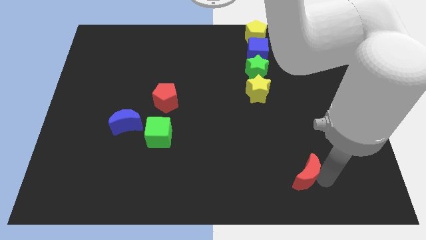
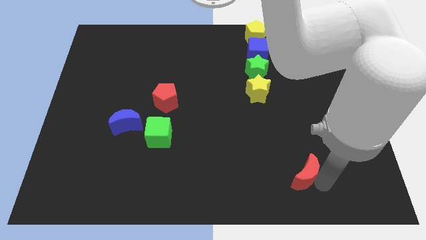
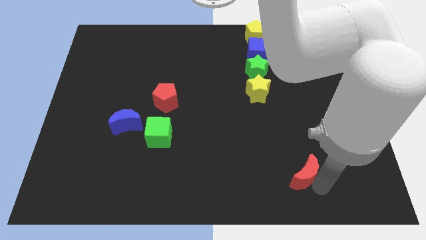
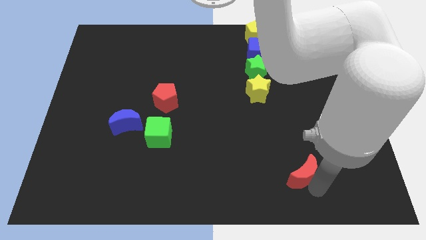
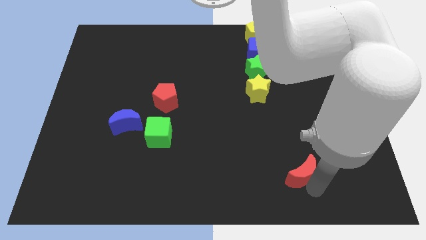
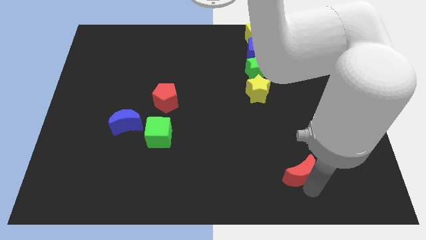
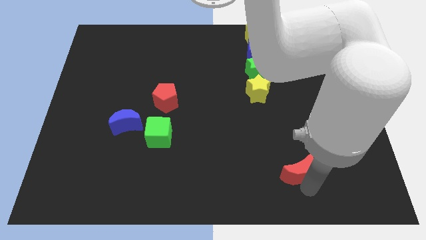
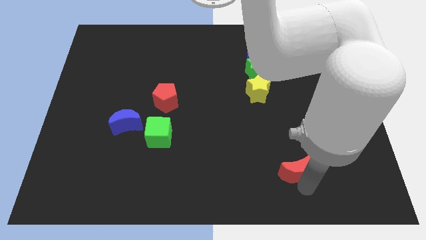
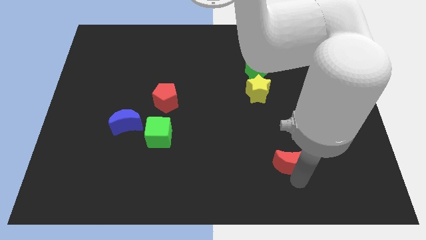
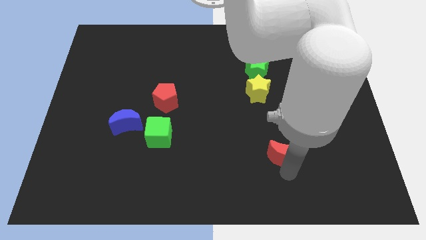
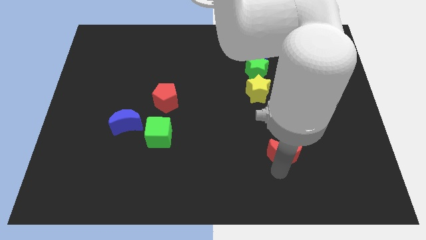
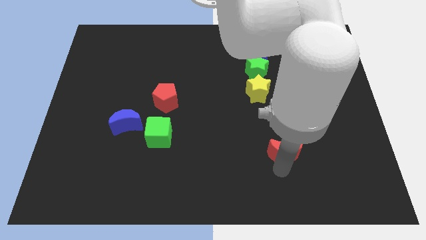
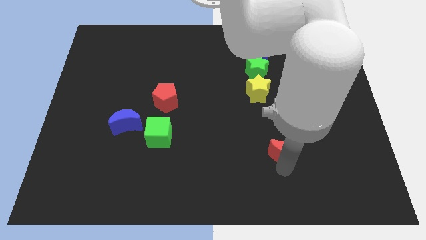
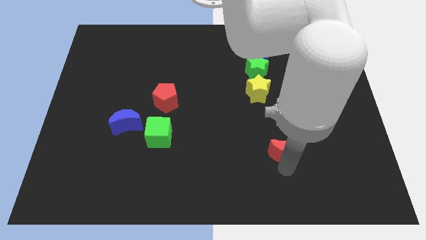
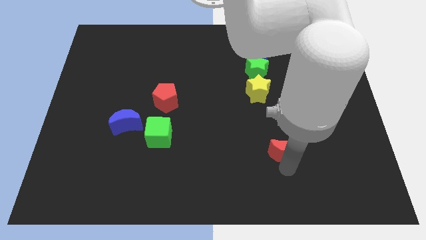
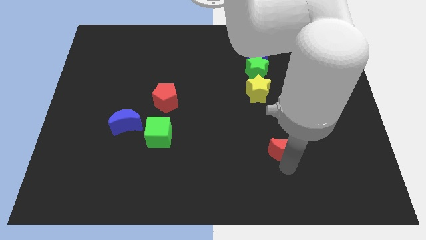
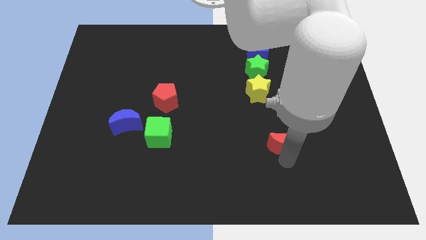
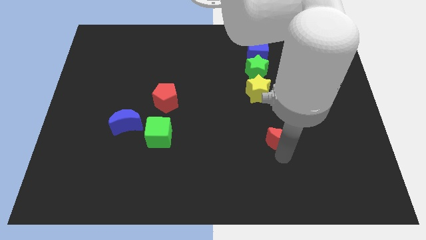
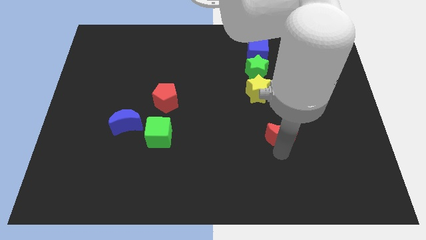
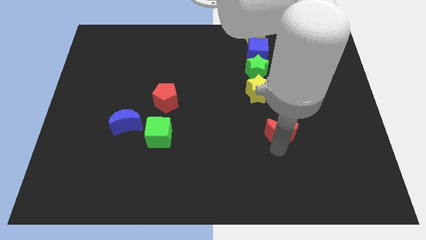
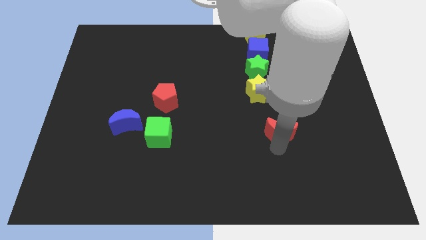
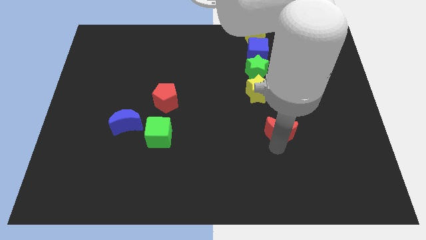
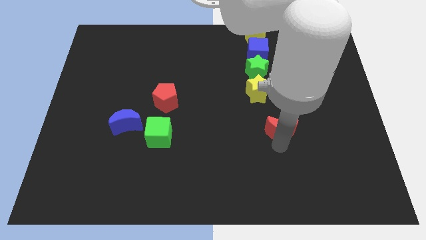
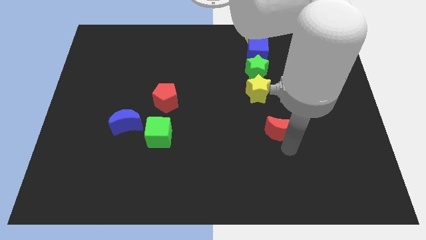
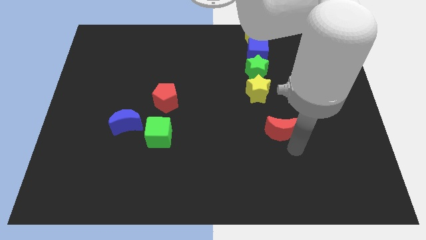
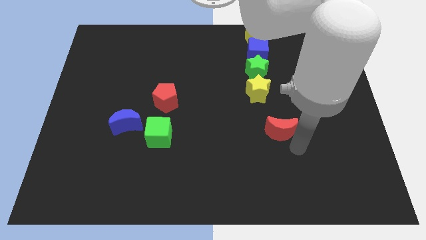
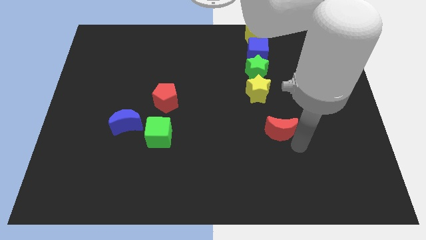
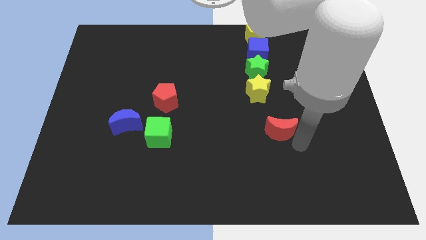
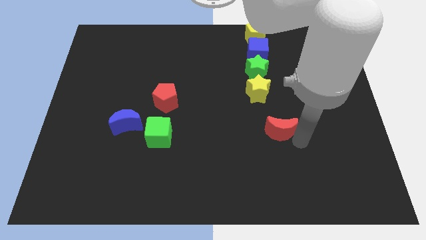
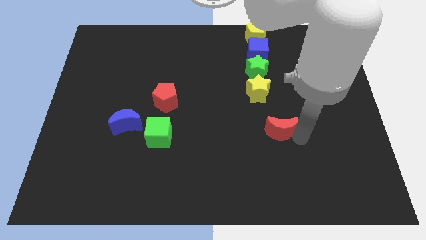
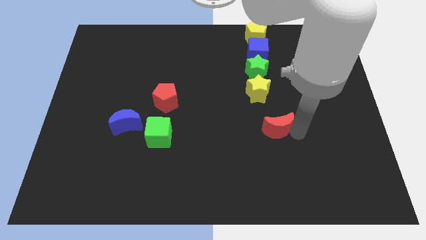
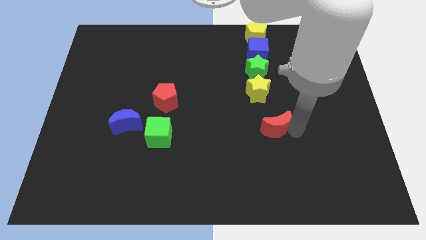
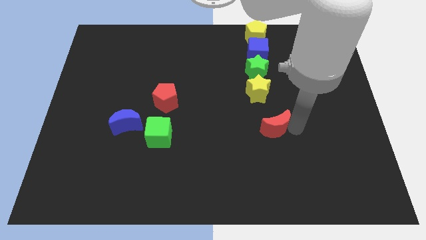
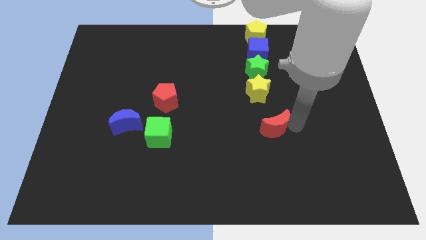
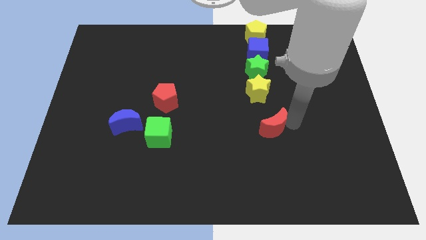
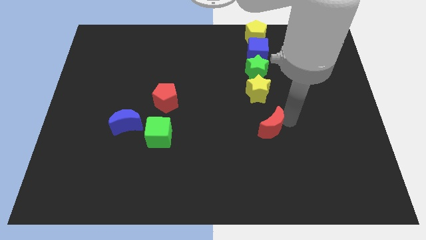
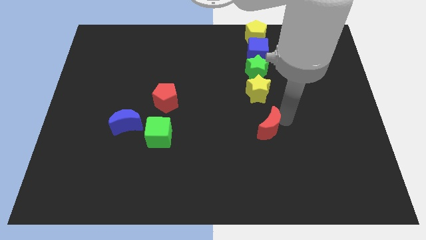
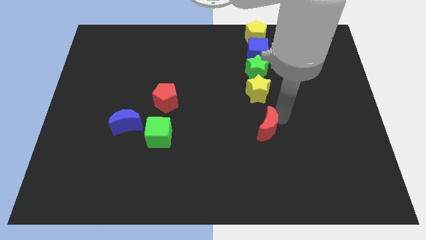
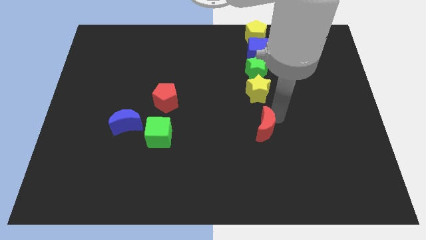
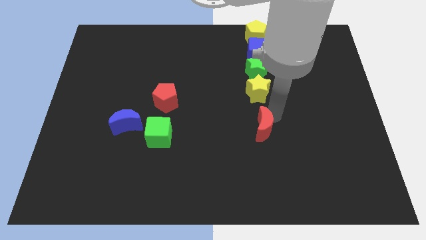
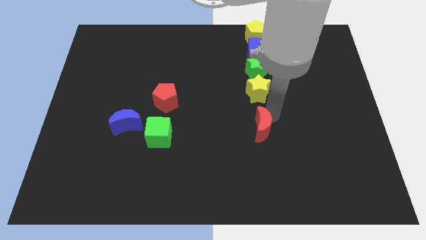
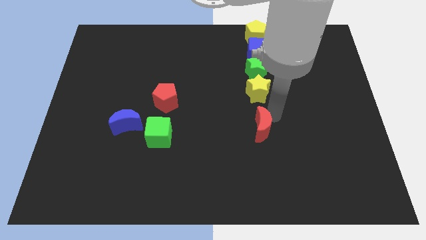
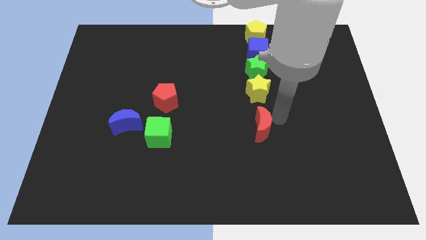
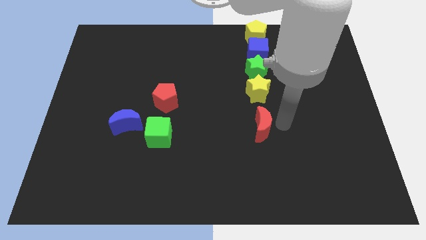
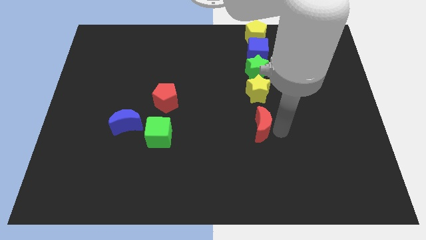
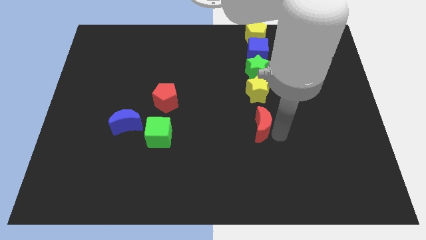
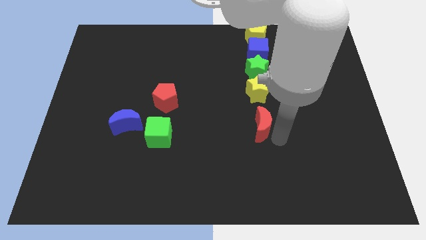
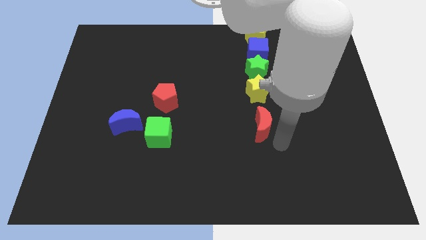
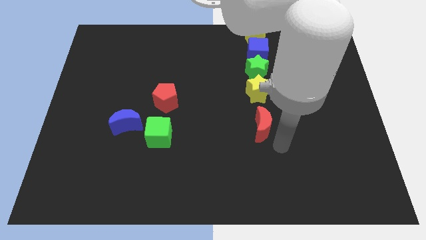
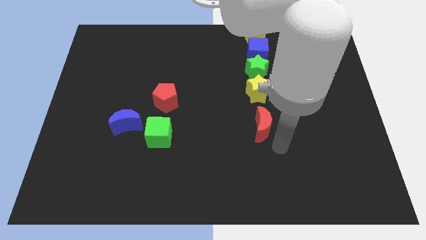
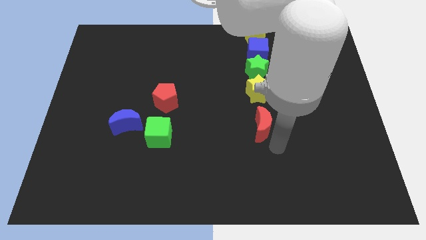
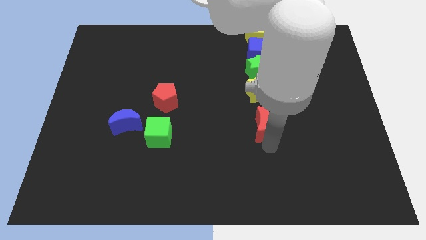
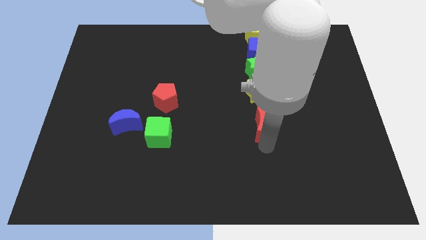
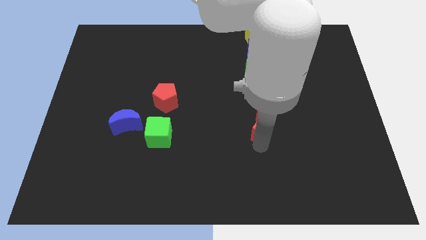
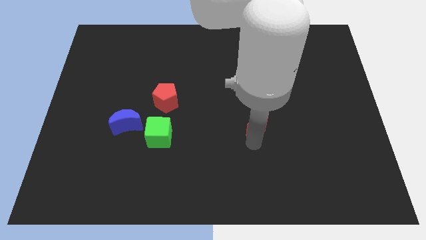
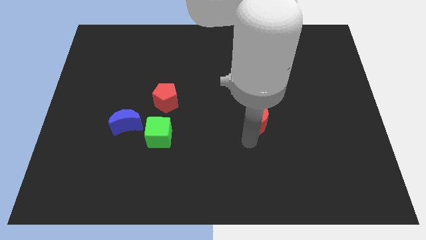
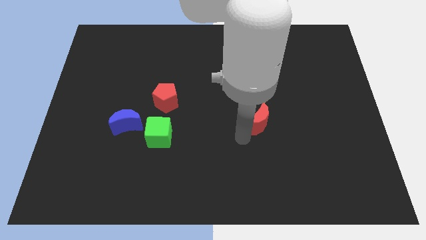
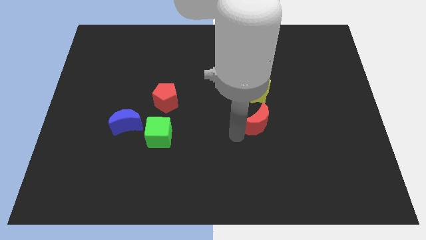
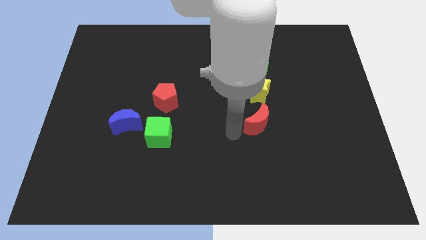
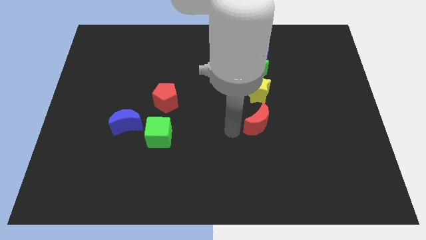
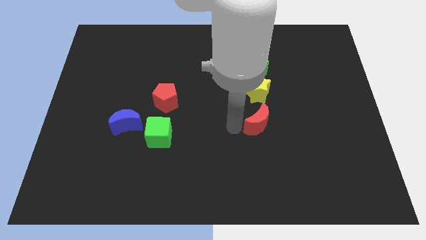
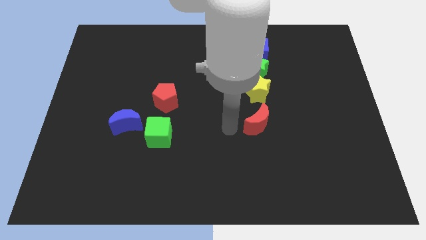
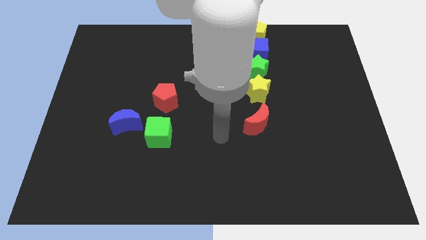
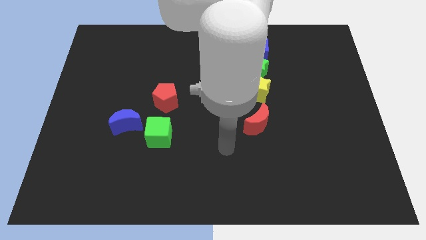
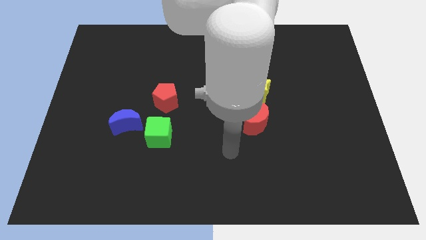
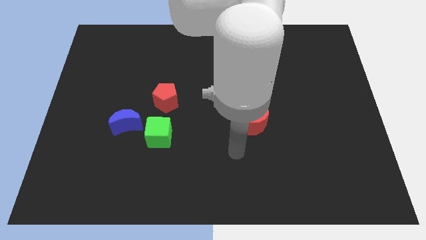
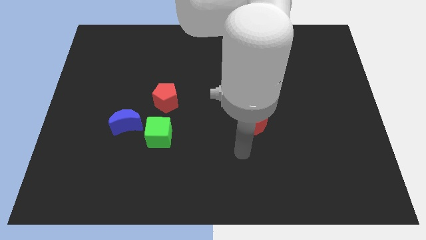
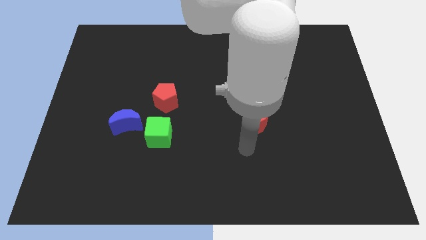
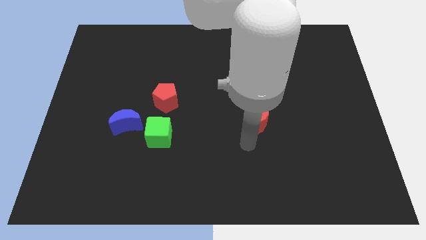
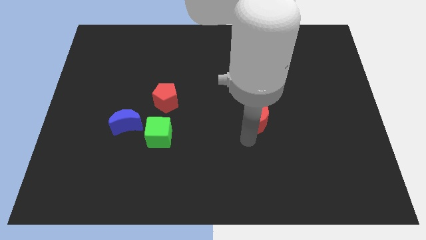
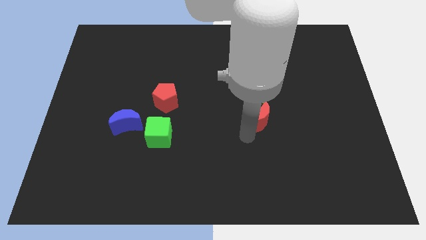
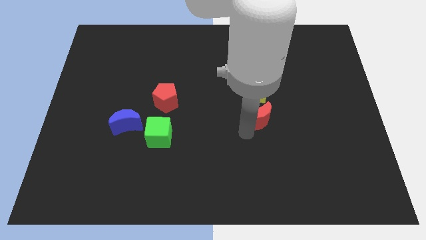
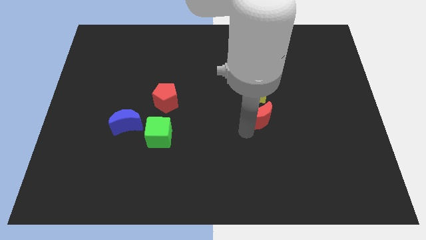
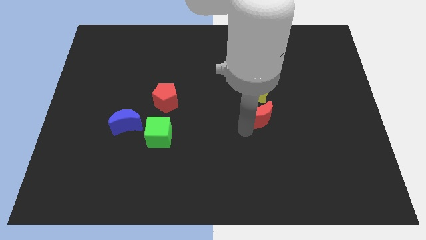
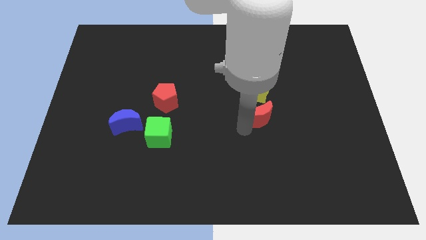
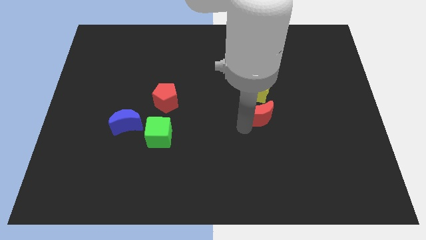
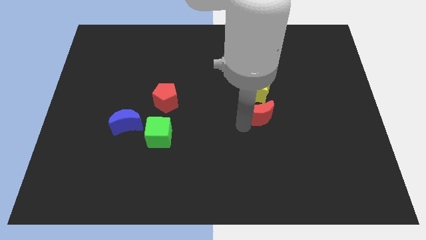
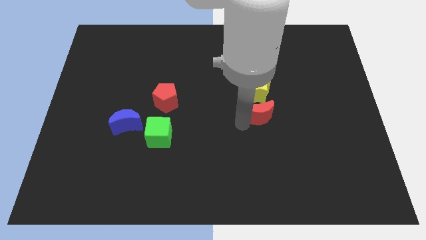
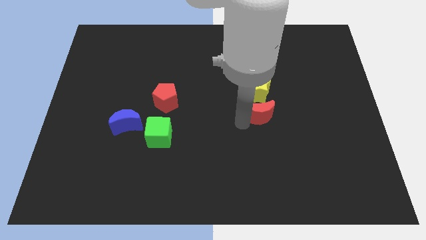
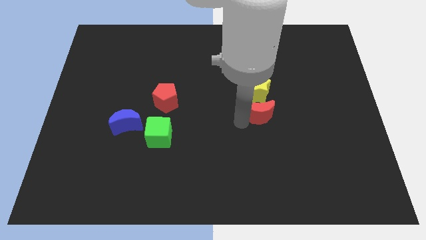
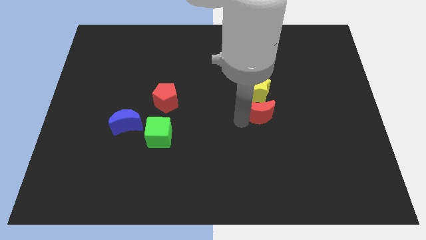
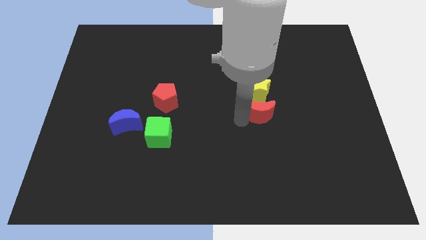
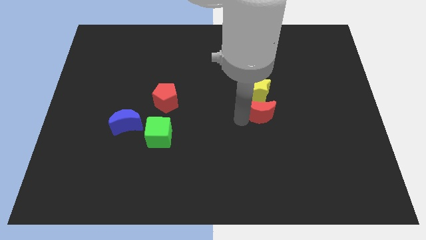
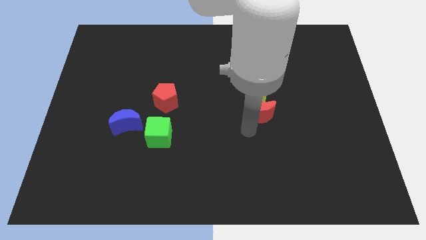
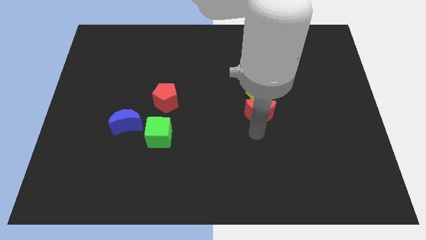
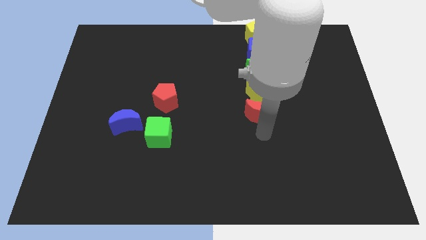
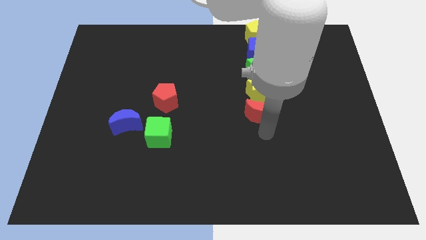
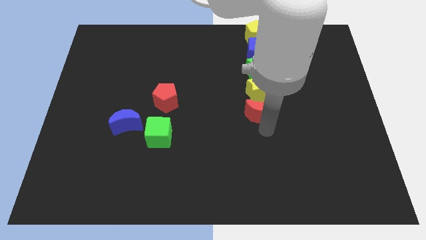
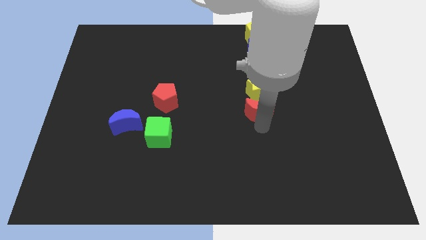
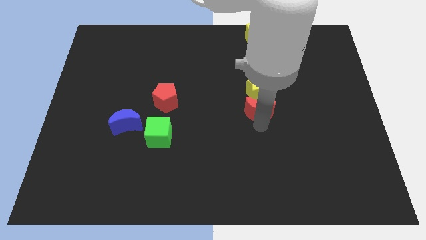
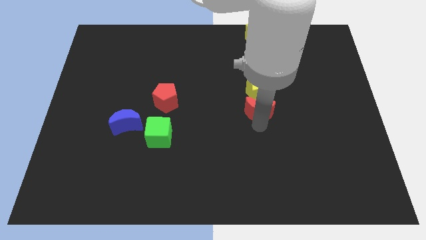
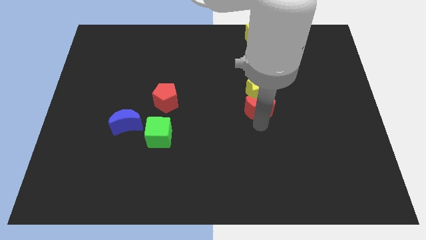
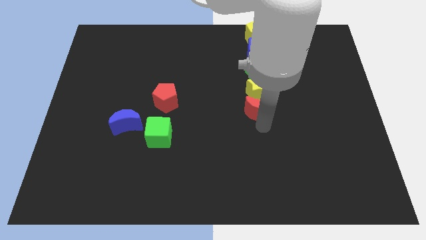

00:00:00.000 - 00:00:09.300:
put the red crescent below the yellow star
